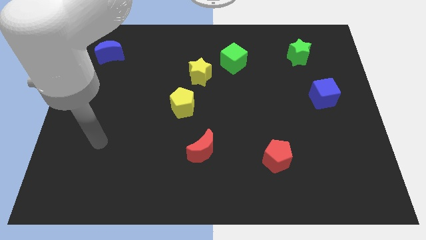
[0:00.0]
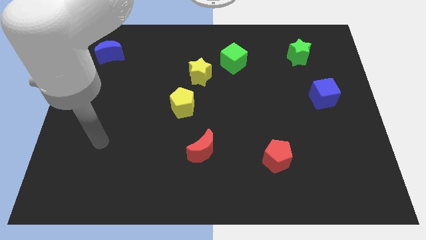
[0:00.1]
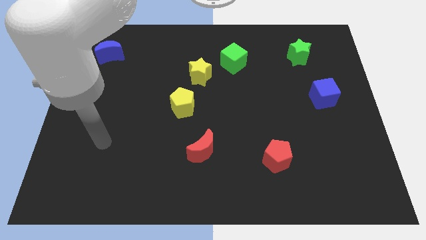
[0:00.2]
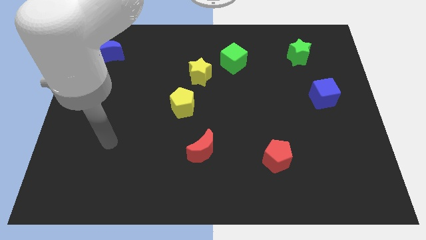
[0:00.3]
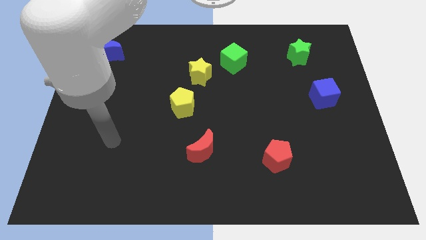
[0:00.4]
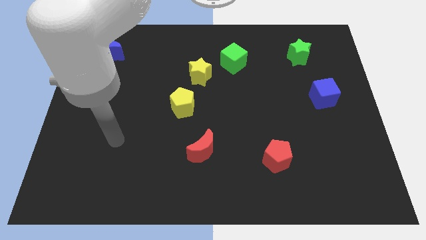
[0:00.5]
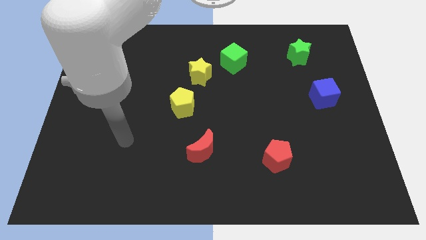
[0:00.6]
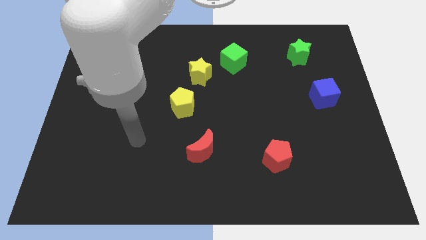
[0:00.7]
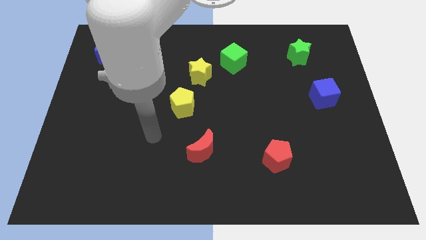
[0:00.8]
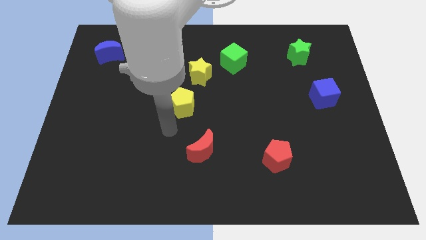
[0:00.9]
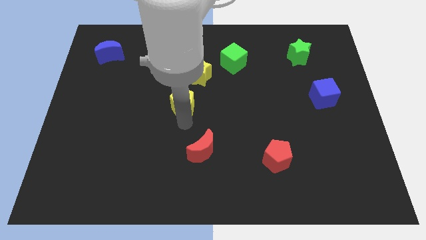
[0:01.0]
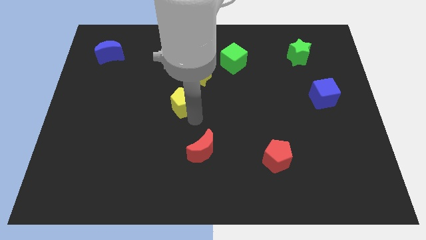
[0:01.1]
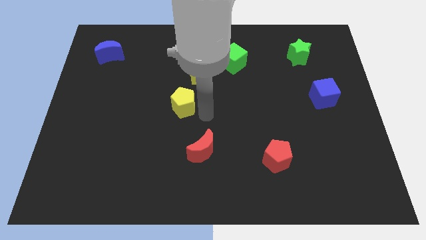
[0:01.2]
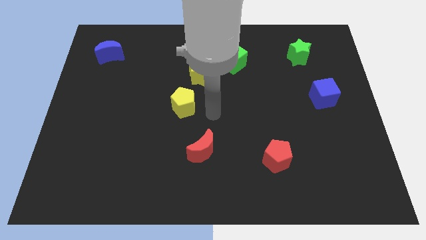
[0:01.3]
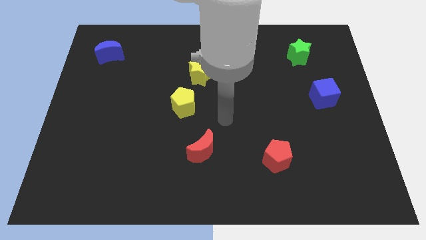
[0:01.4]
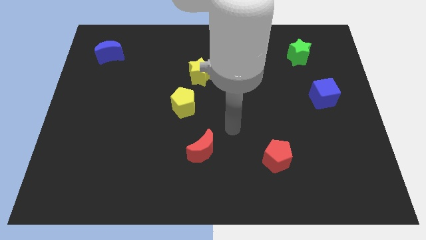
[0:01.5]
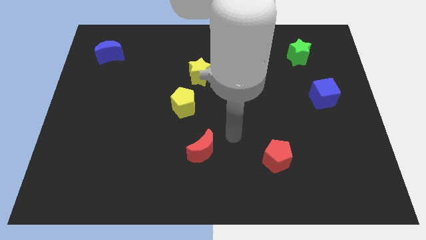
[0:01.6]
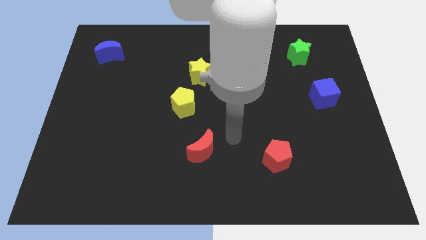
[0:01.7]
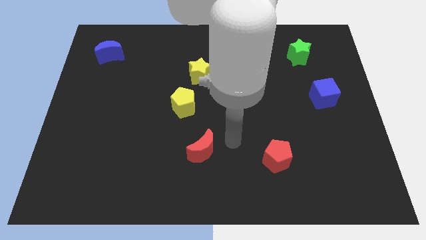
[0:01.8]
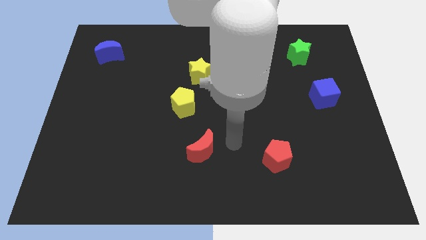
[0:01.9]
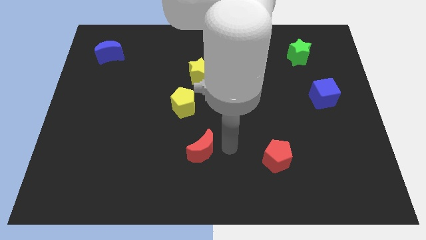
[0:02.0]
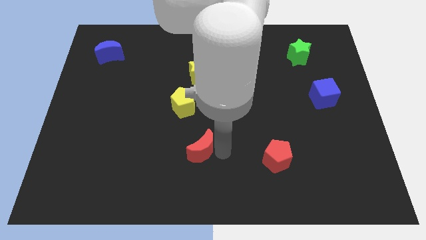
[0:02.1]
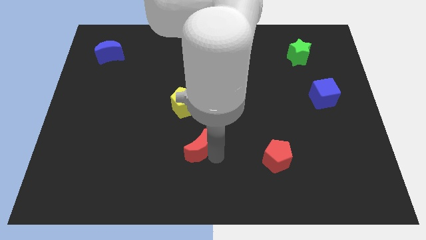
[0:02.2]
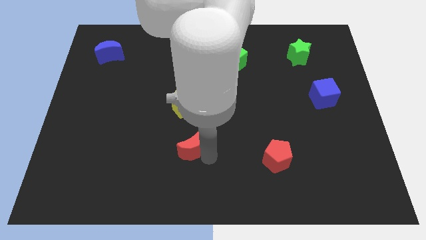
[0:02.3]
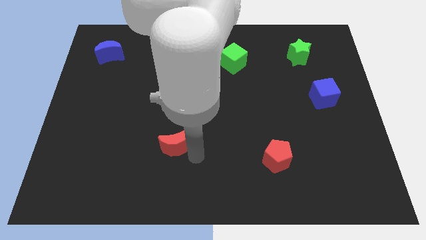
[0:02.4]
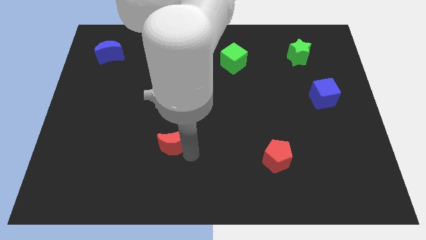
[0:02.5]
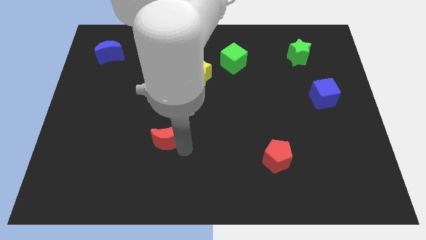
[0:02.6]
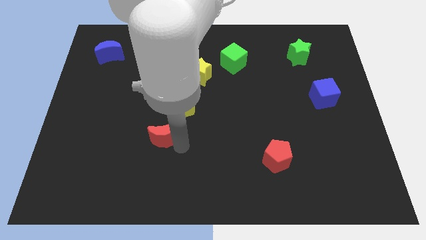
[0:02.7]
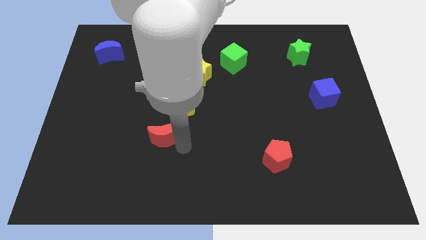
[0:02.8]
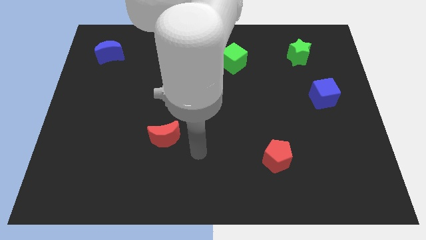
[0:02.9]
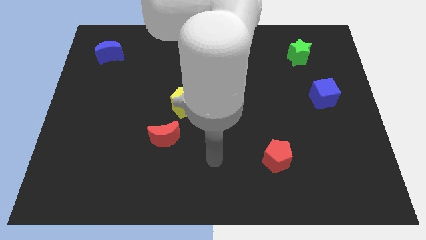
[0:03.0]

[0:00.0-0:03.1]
move the red crescent to the bottom left of the yellow pentagon

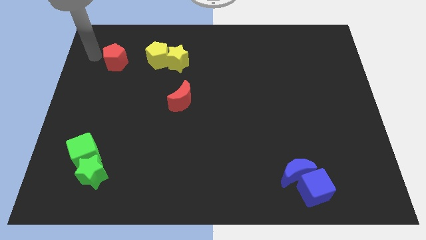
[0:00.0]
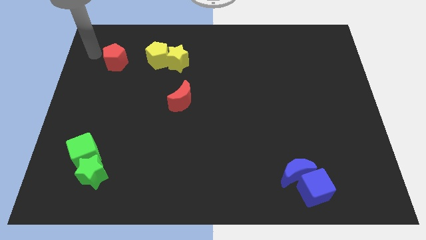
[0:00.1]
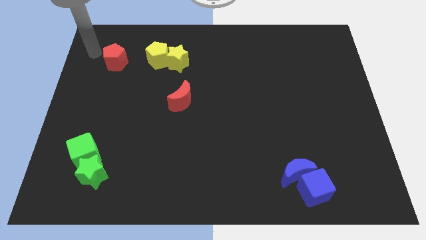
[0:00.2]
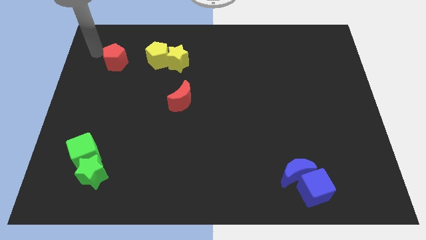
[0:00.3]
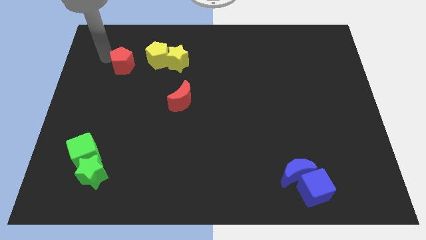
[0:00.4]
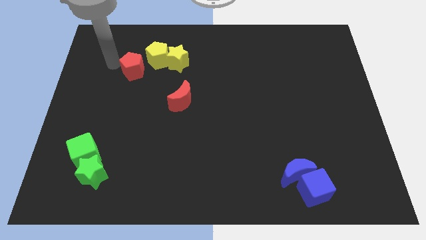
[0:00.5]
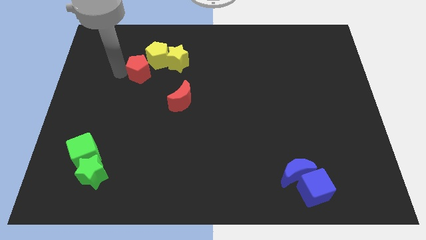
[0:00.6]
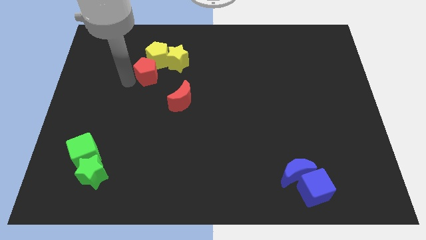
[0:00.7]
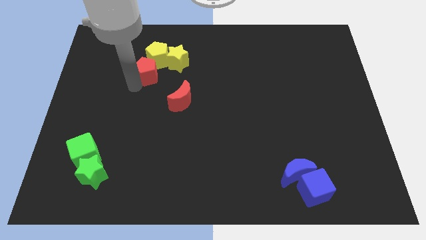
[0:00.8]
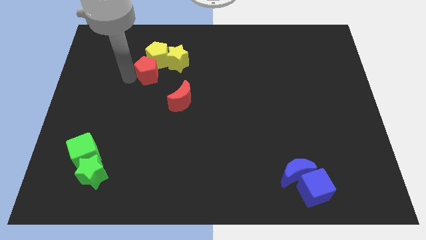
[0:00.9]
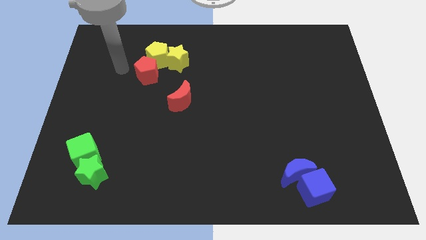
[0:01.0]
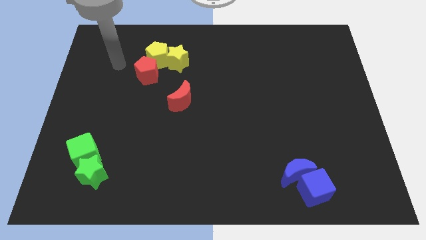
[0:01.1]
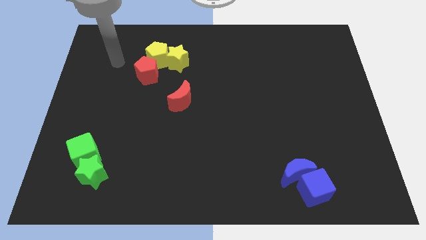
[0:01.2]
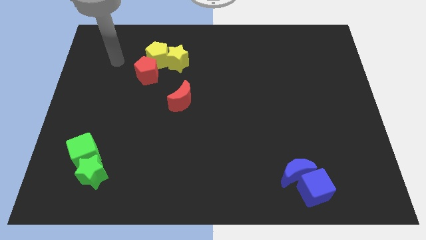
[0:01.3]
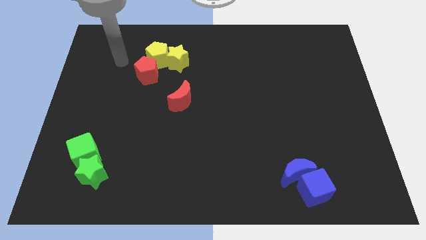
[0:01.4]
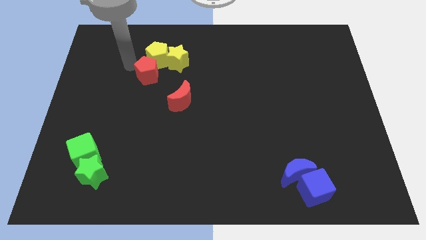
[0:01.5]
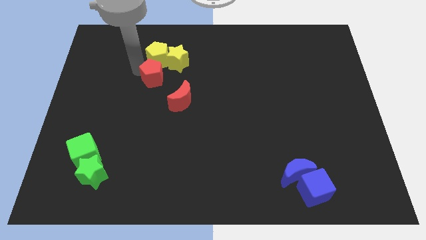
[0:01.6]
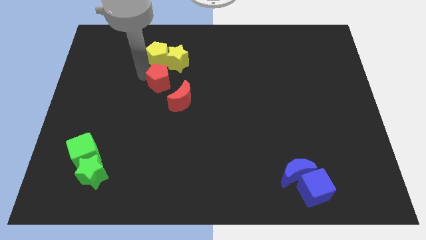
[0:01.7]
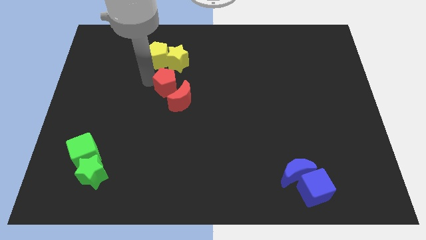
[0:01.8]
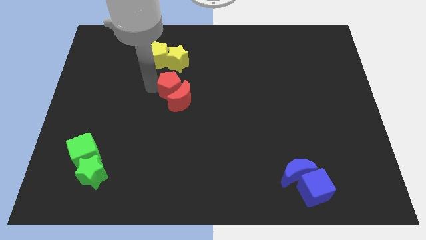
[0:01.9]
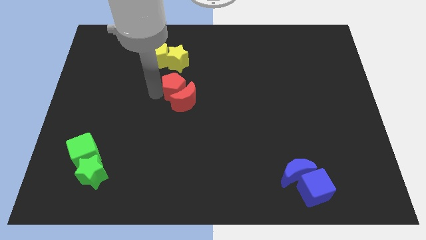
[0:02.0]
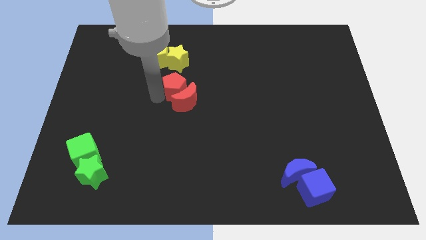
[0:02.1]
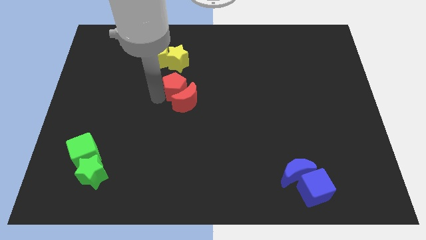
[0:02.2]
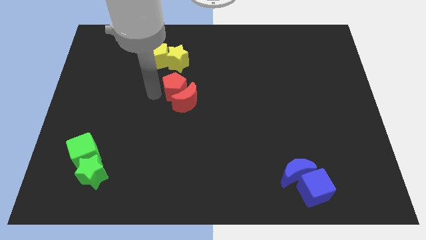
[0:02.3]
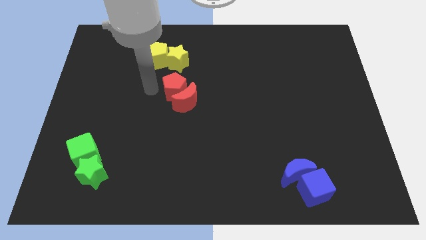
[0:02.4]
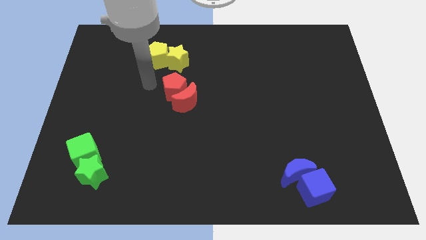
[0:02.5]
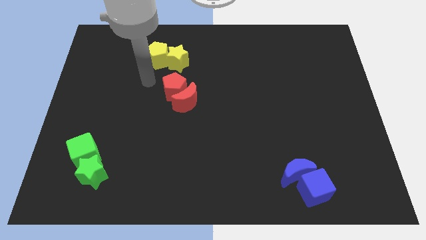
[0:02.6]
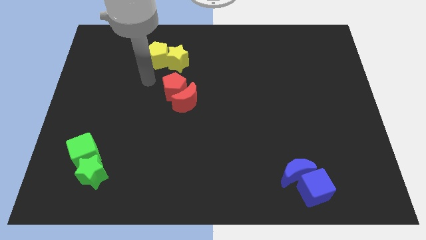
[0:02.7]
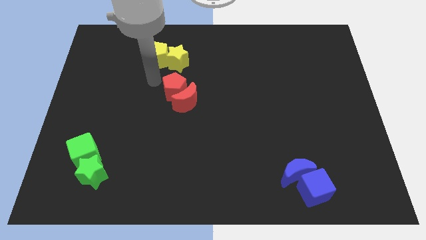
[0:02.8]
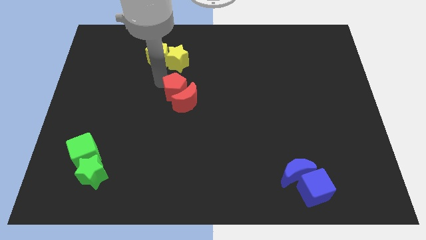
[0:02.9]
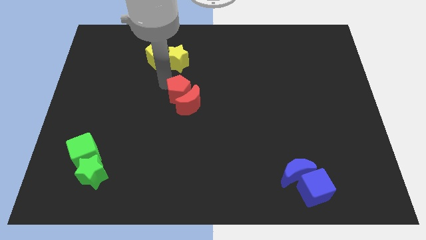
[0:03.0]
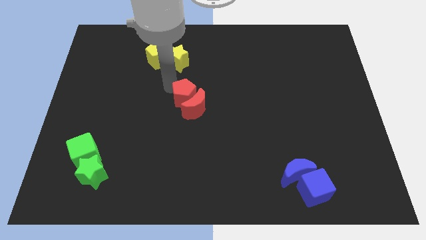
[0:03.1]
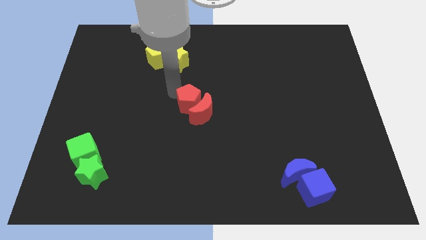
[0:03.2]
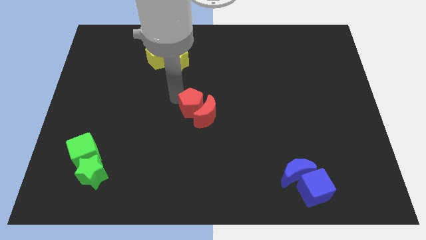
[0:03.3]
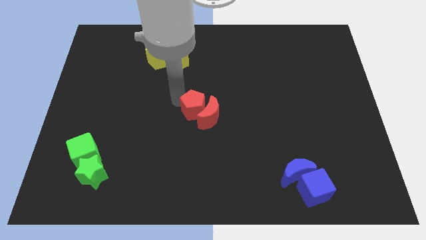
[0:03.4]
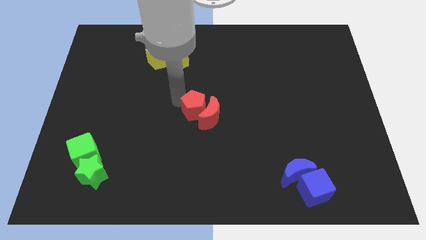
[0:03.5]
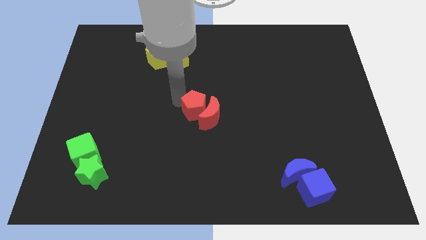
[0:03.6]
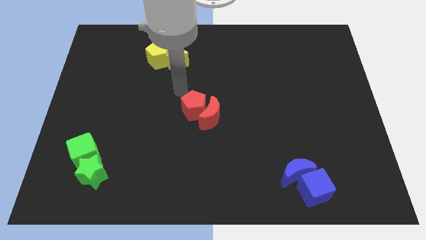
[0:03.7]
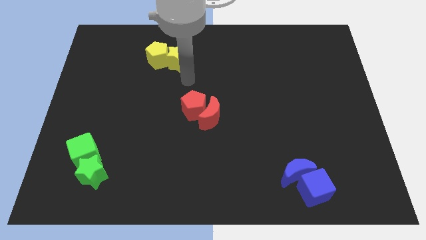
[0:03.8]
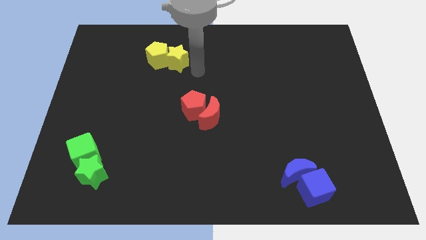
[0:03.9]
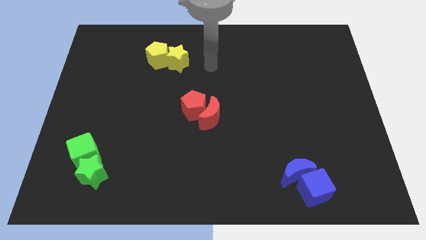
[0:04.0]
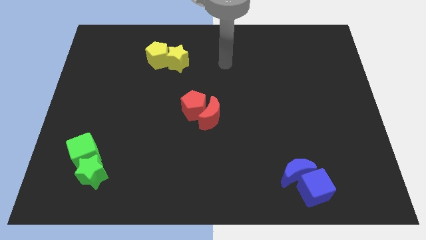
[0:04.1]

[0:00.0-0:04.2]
push the red pentagon into the red crescent

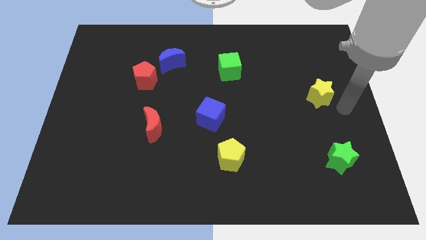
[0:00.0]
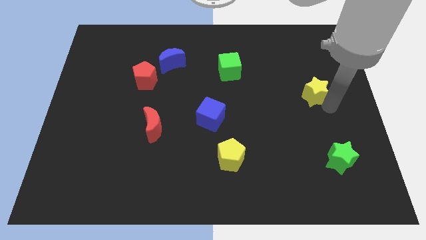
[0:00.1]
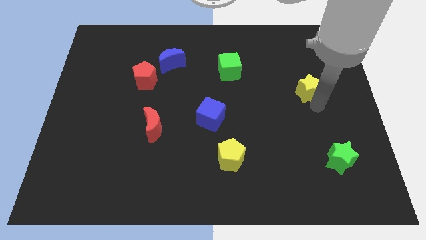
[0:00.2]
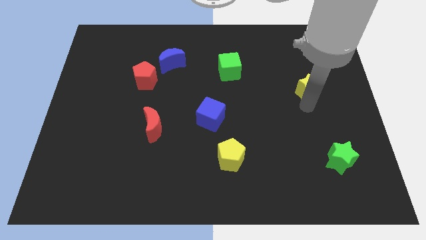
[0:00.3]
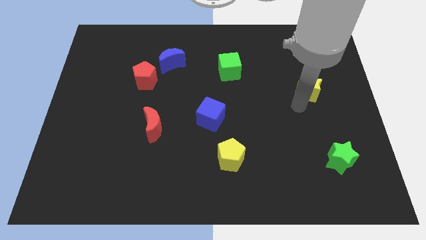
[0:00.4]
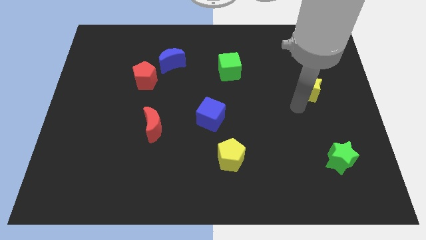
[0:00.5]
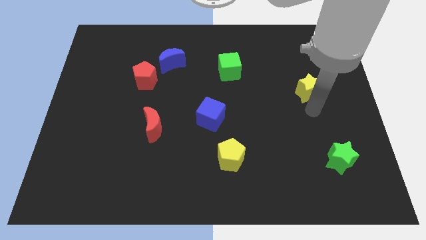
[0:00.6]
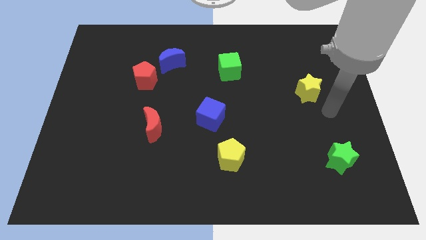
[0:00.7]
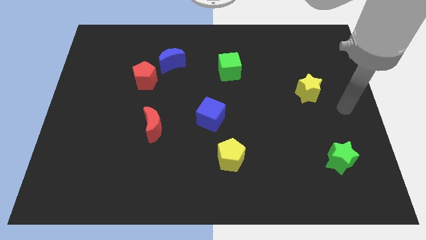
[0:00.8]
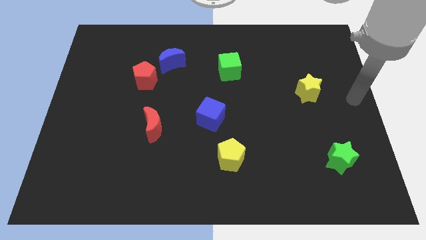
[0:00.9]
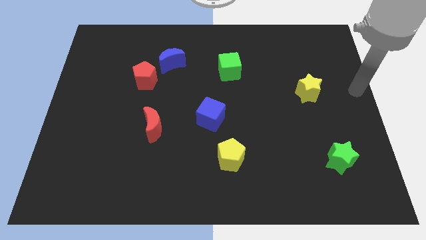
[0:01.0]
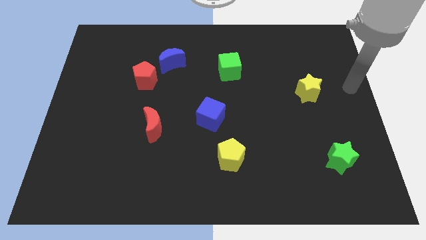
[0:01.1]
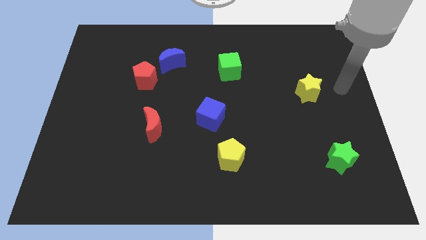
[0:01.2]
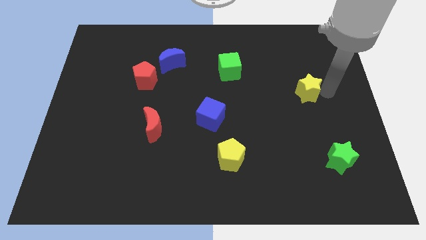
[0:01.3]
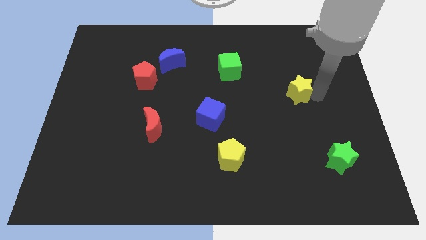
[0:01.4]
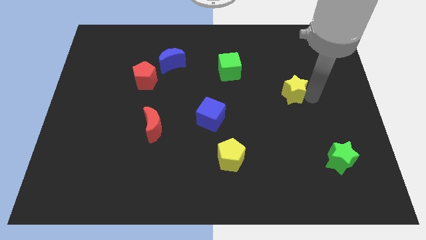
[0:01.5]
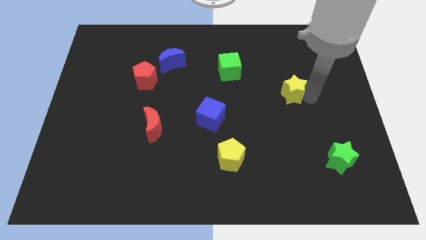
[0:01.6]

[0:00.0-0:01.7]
put the yellow star diagonally to the top left side of the green star
